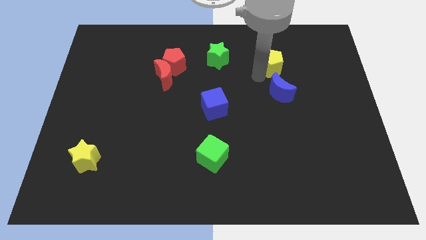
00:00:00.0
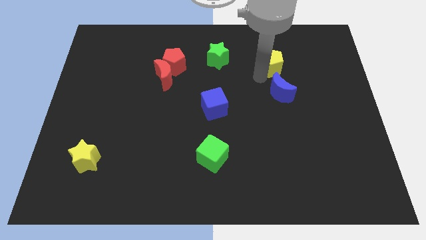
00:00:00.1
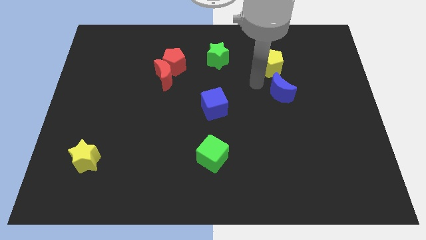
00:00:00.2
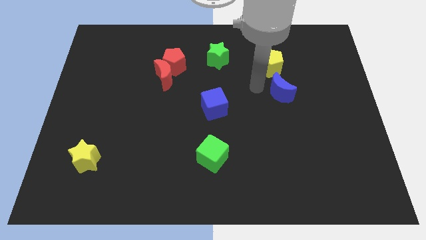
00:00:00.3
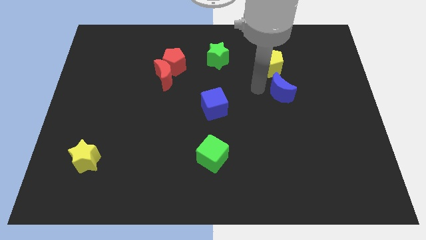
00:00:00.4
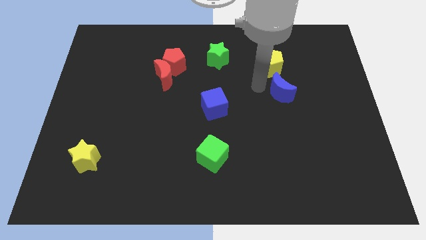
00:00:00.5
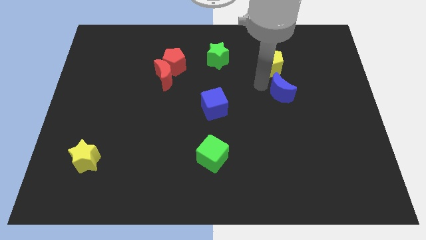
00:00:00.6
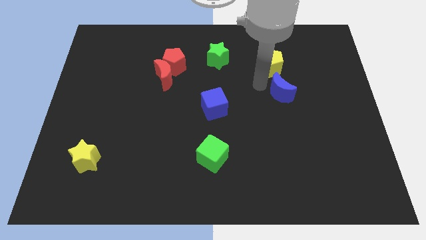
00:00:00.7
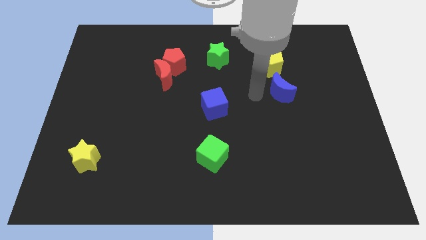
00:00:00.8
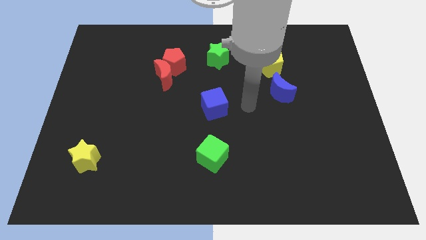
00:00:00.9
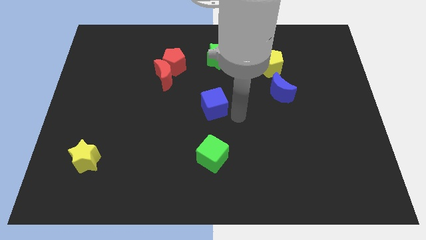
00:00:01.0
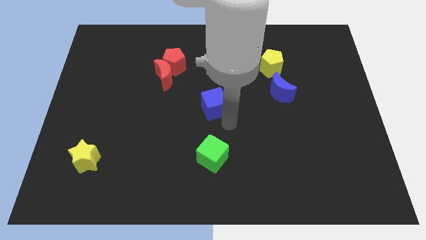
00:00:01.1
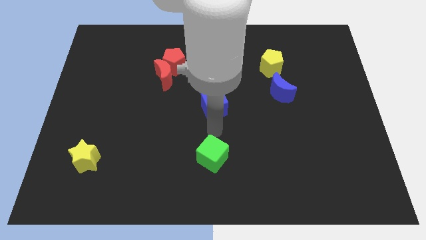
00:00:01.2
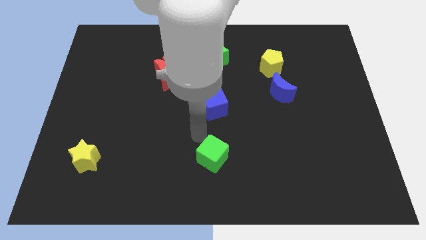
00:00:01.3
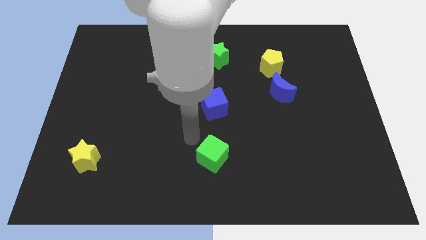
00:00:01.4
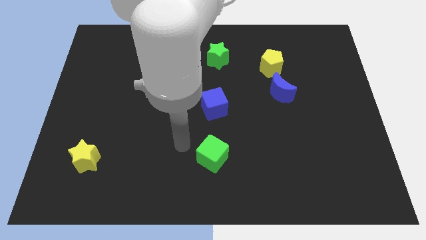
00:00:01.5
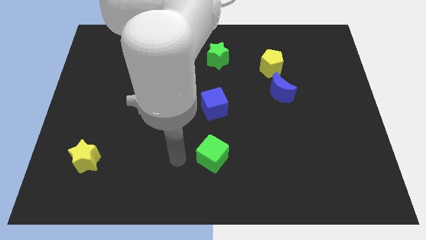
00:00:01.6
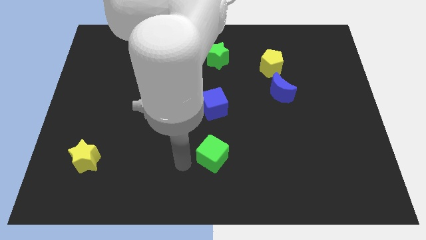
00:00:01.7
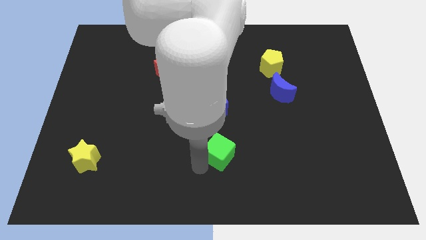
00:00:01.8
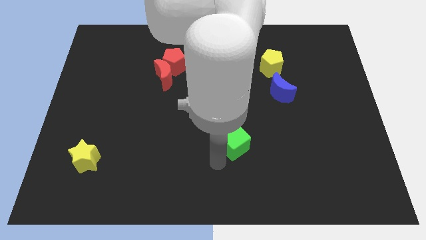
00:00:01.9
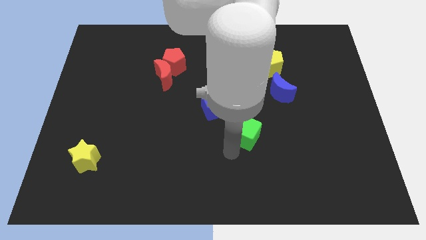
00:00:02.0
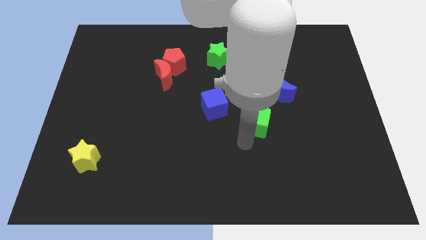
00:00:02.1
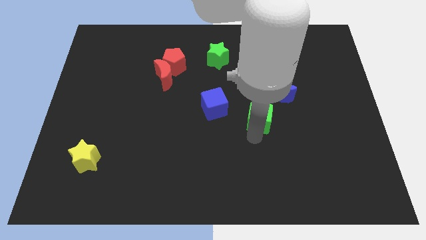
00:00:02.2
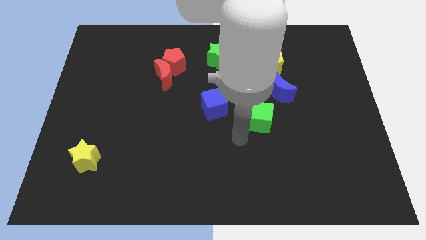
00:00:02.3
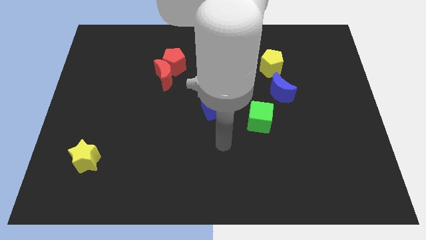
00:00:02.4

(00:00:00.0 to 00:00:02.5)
move the green cube diagonal to the blue cube

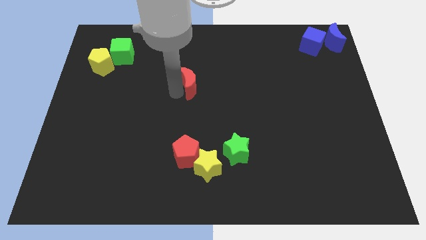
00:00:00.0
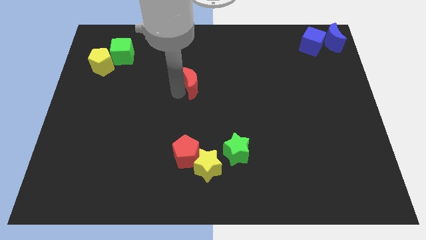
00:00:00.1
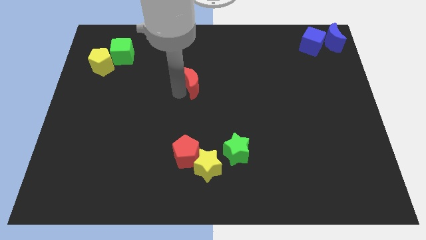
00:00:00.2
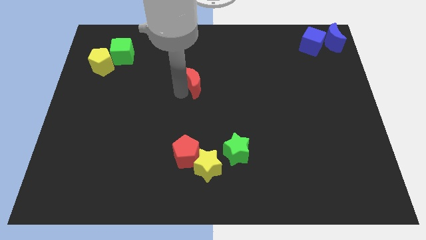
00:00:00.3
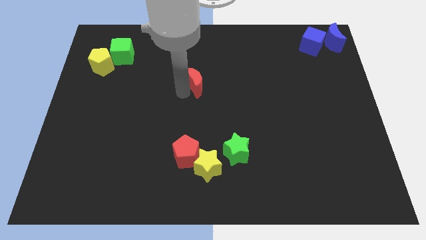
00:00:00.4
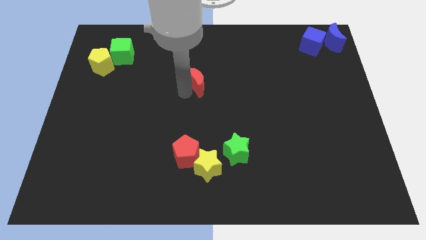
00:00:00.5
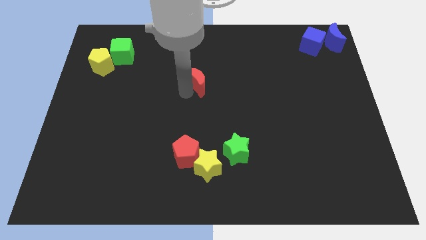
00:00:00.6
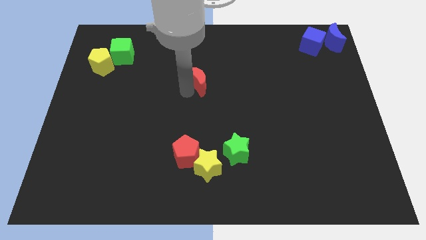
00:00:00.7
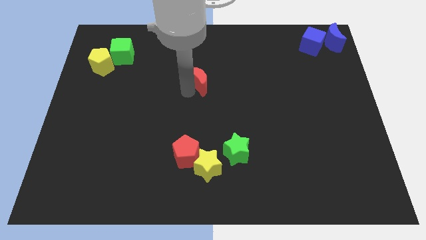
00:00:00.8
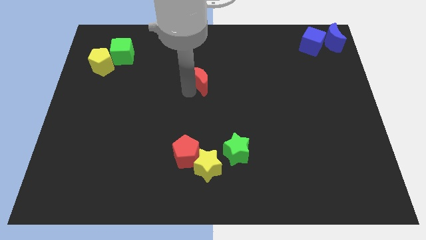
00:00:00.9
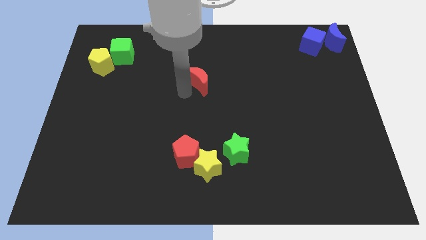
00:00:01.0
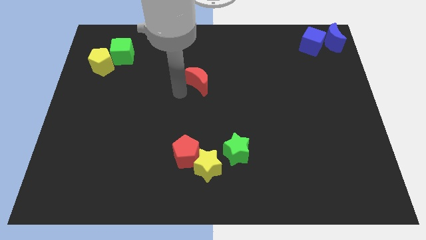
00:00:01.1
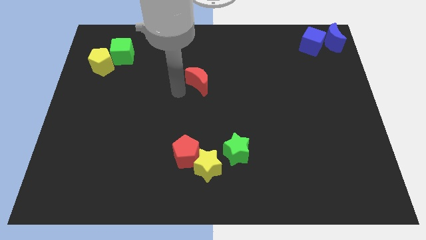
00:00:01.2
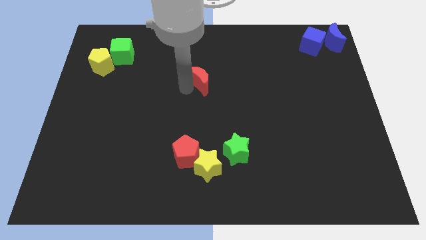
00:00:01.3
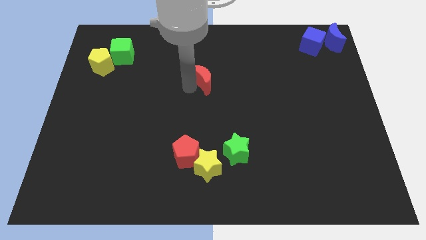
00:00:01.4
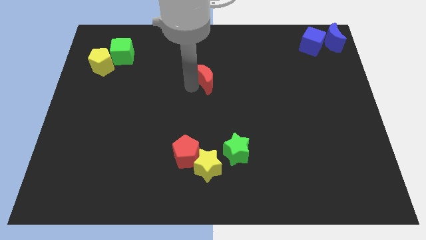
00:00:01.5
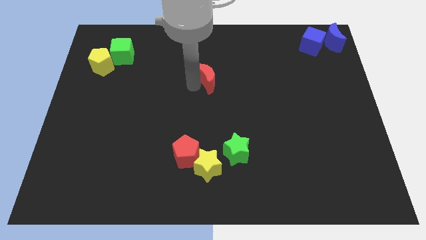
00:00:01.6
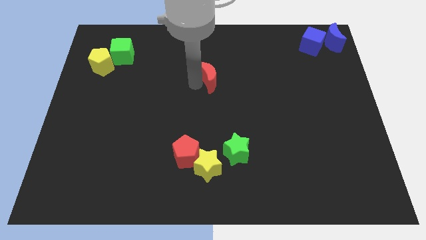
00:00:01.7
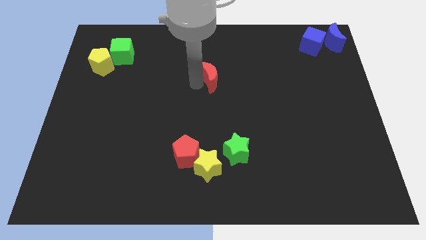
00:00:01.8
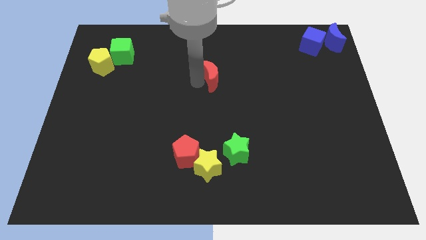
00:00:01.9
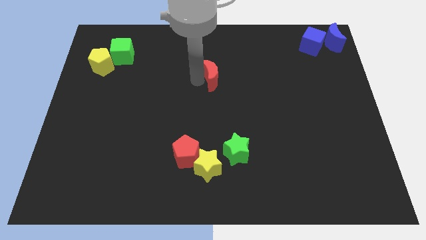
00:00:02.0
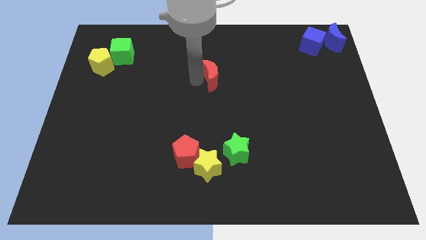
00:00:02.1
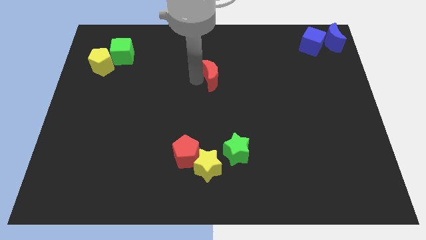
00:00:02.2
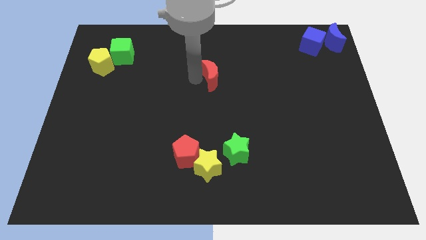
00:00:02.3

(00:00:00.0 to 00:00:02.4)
move the red crescent to right side

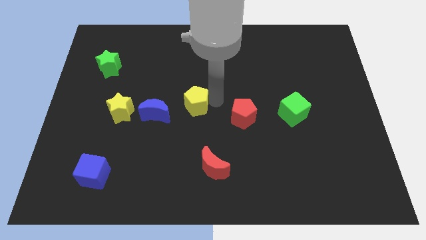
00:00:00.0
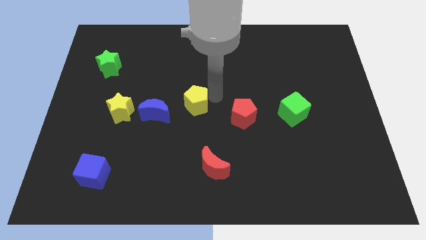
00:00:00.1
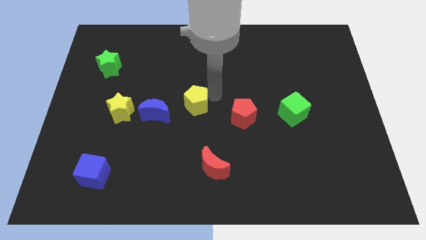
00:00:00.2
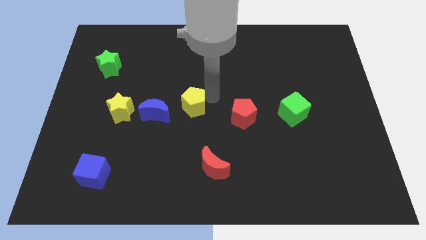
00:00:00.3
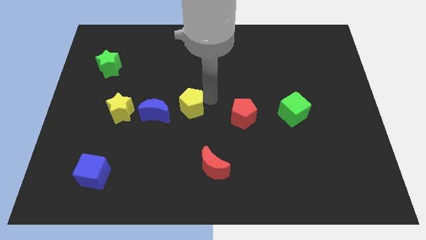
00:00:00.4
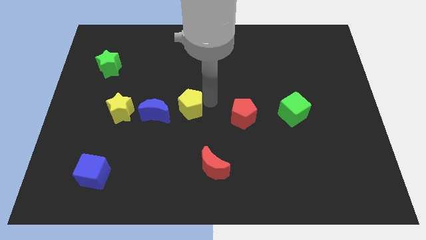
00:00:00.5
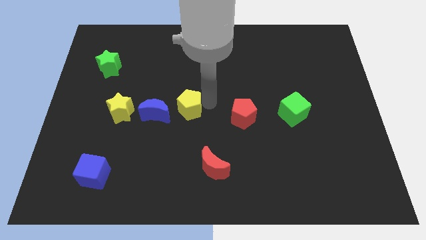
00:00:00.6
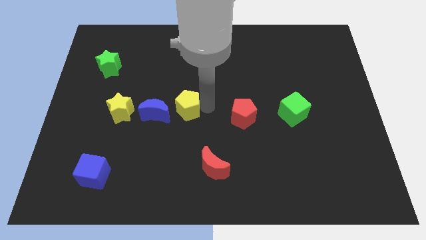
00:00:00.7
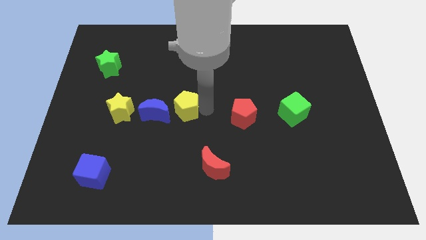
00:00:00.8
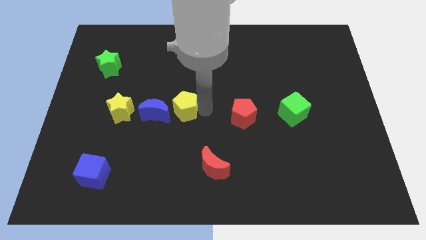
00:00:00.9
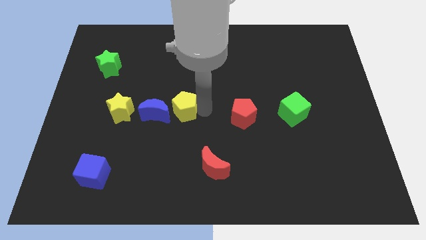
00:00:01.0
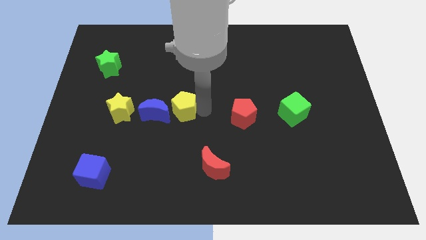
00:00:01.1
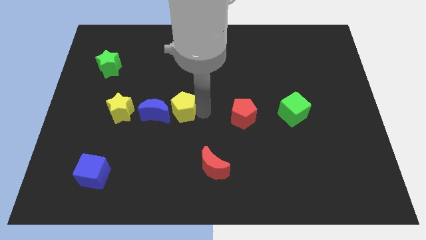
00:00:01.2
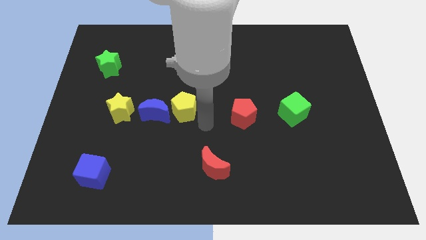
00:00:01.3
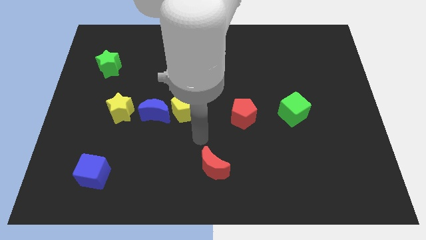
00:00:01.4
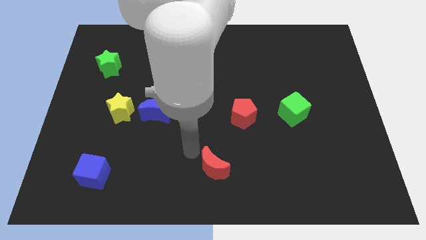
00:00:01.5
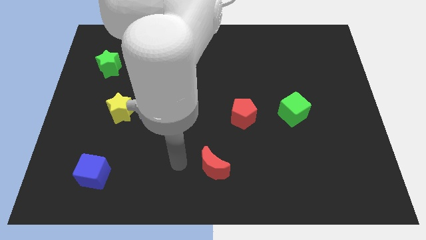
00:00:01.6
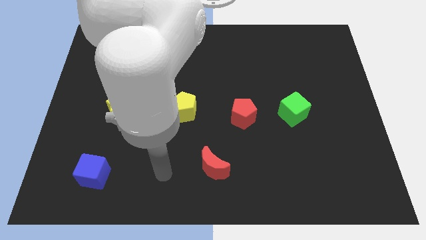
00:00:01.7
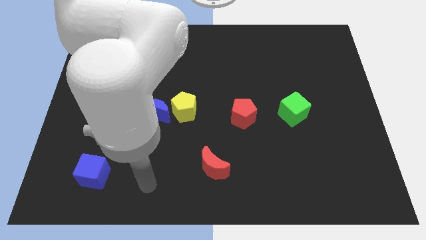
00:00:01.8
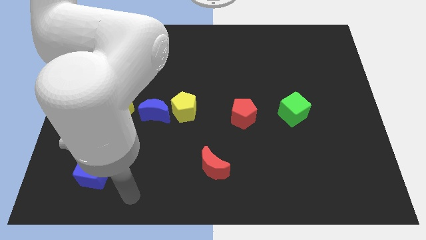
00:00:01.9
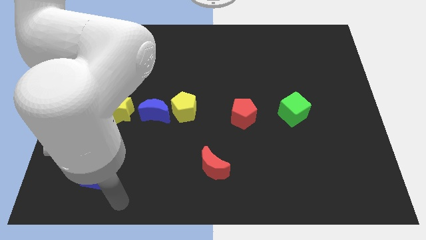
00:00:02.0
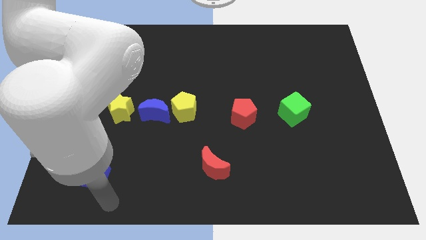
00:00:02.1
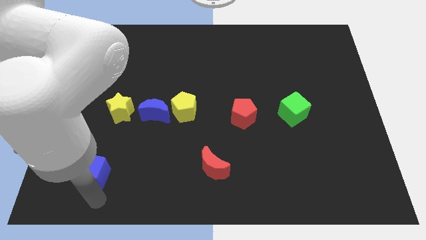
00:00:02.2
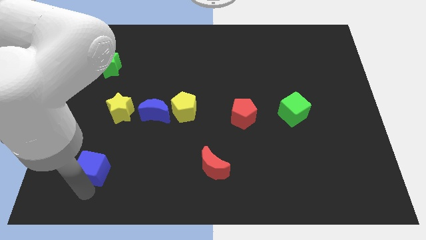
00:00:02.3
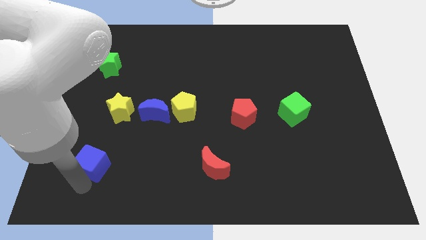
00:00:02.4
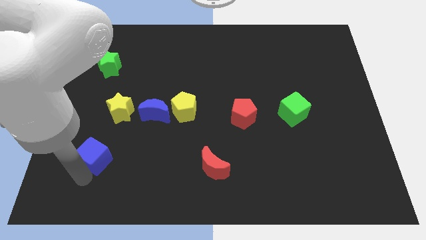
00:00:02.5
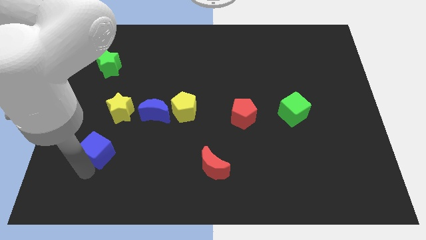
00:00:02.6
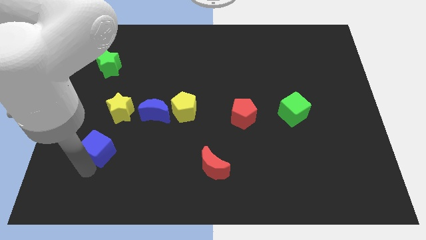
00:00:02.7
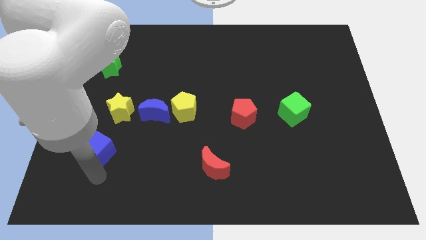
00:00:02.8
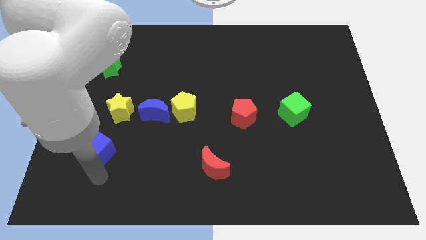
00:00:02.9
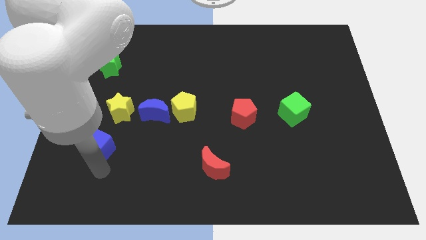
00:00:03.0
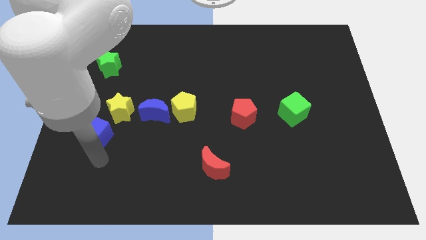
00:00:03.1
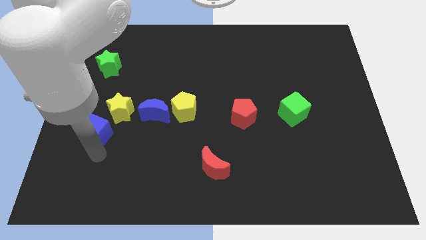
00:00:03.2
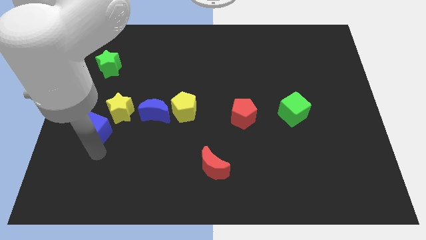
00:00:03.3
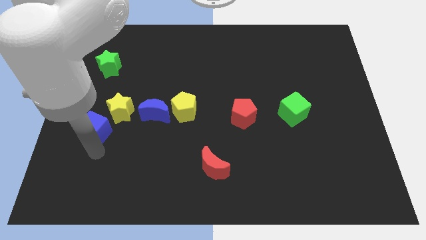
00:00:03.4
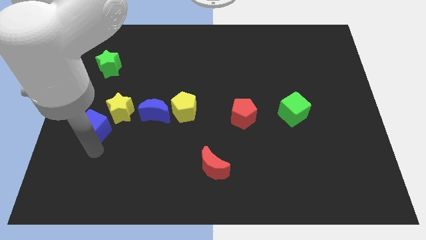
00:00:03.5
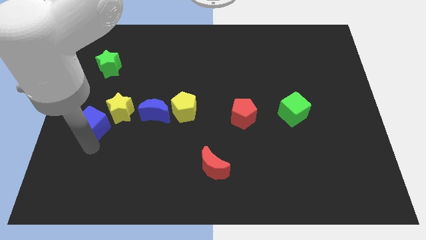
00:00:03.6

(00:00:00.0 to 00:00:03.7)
place the blue cube diagonal to the yellow star

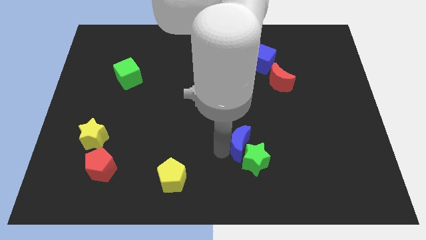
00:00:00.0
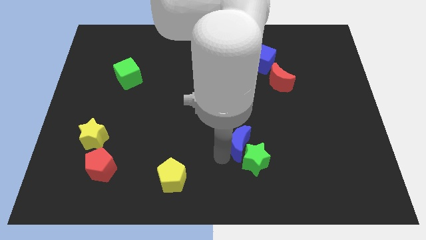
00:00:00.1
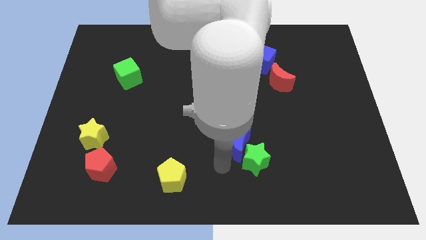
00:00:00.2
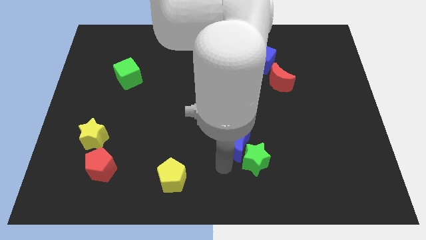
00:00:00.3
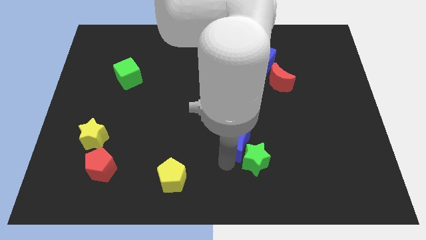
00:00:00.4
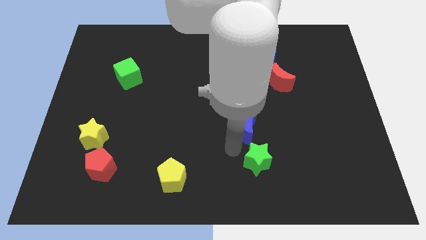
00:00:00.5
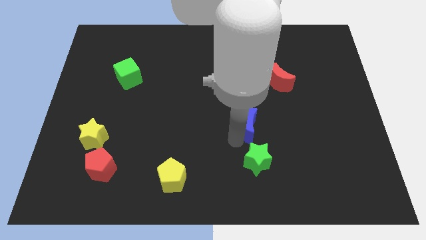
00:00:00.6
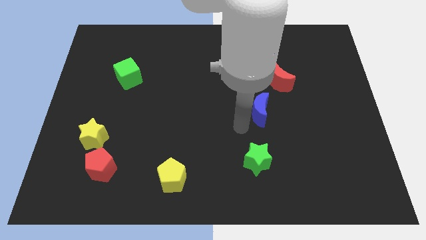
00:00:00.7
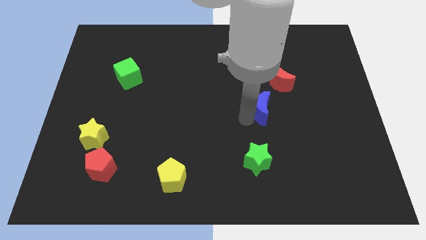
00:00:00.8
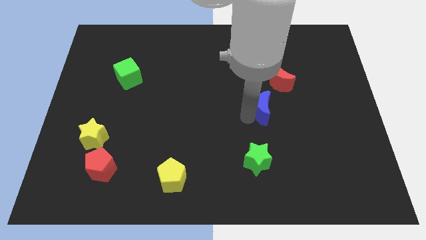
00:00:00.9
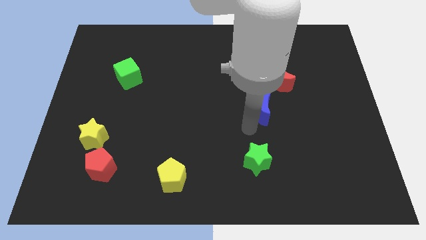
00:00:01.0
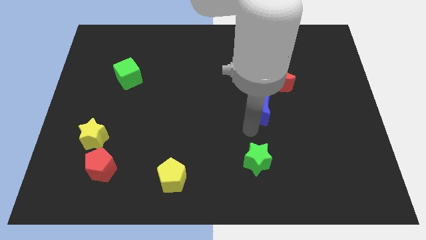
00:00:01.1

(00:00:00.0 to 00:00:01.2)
separate the blue moon from the green star
